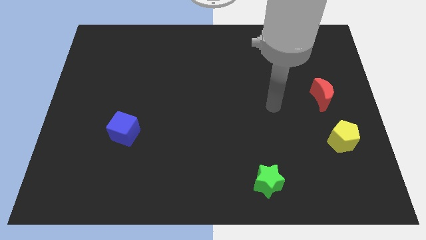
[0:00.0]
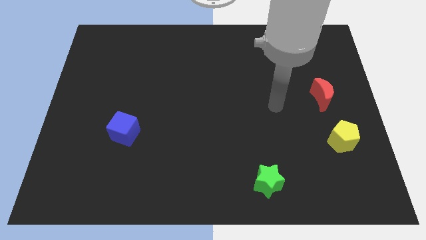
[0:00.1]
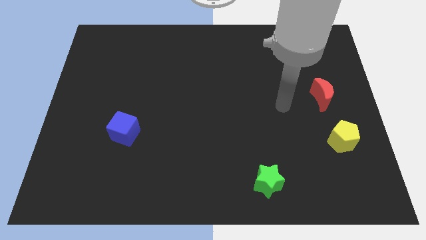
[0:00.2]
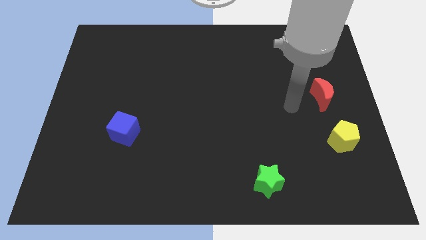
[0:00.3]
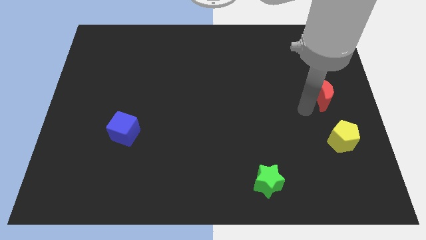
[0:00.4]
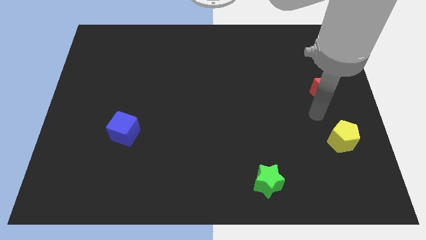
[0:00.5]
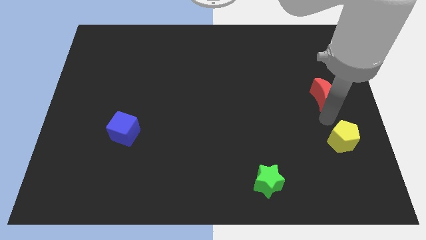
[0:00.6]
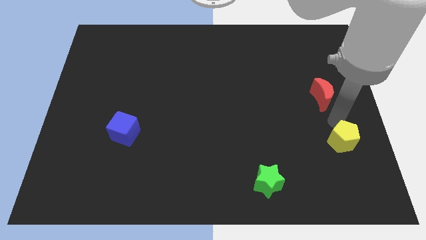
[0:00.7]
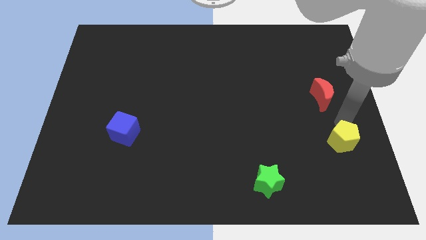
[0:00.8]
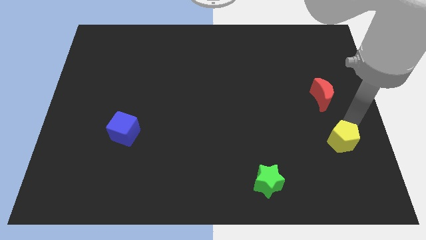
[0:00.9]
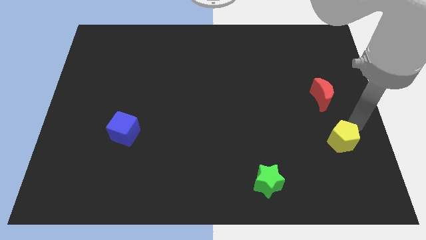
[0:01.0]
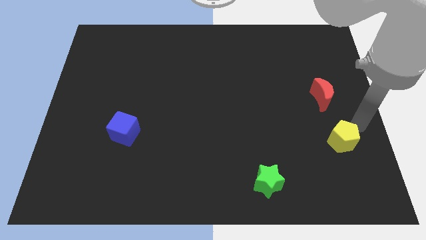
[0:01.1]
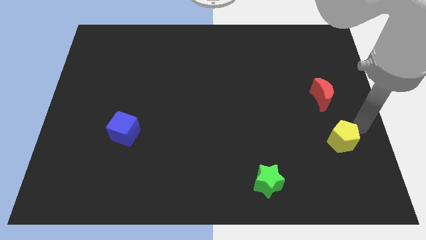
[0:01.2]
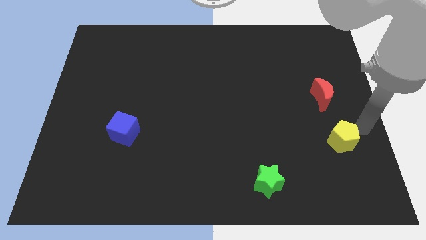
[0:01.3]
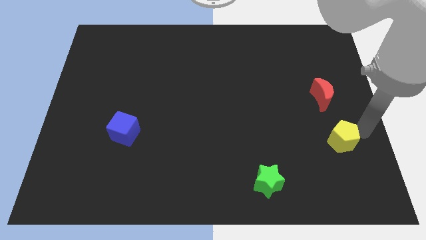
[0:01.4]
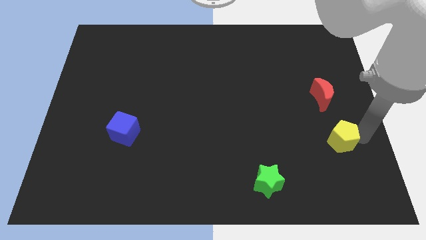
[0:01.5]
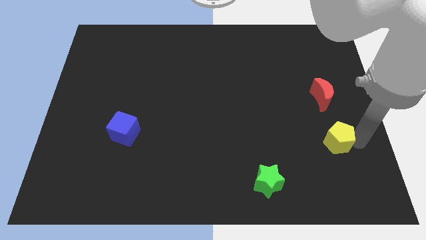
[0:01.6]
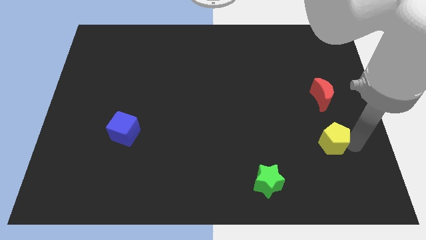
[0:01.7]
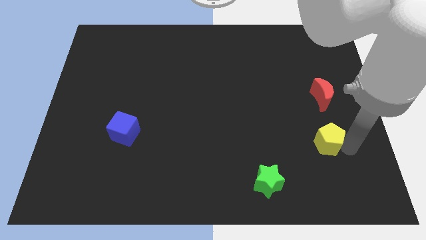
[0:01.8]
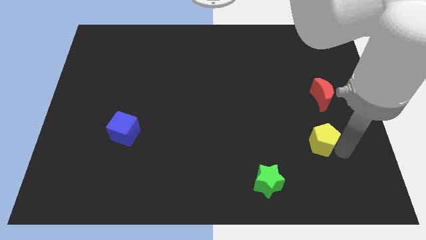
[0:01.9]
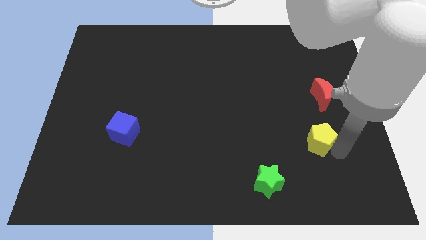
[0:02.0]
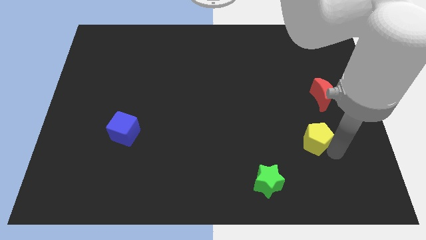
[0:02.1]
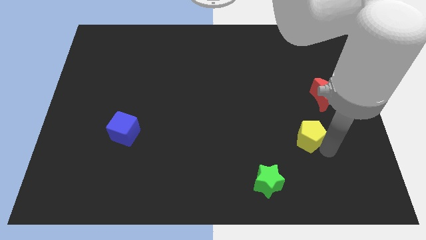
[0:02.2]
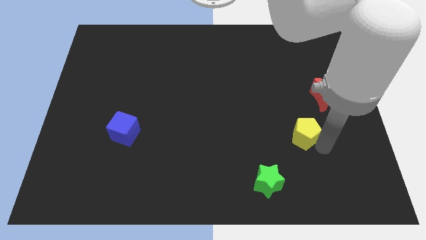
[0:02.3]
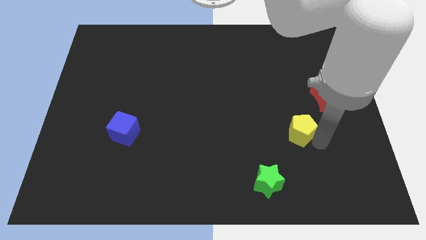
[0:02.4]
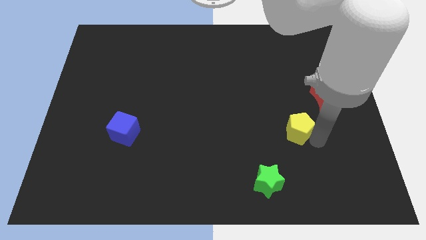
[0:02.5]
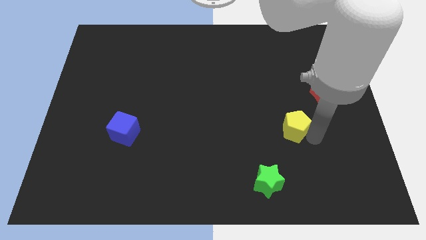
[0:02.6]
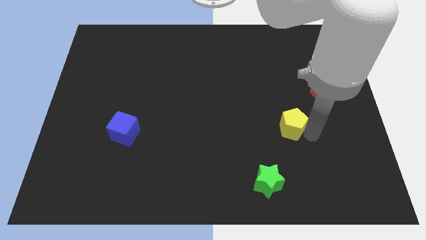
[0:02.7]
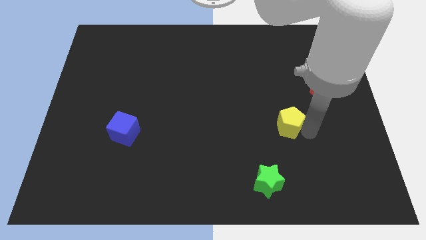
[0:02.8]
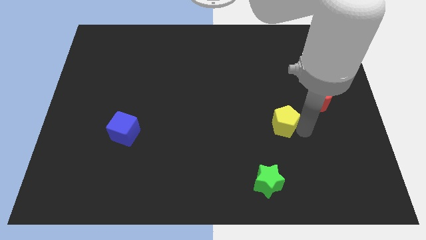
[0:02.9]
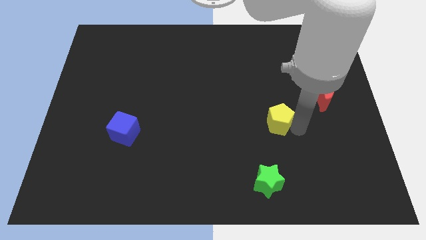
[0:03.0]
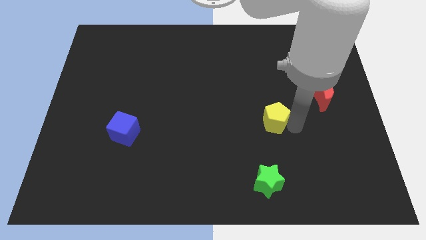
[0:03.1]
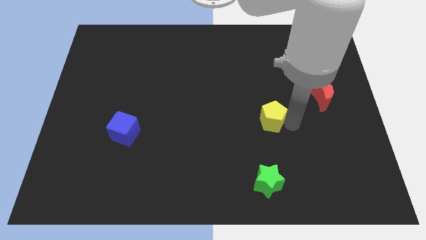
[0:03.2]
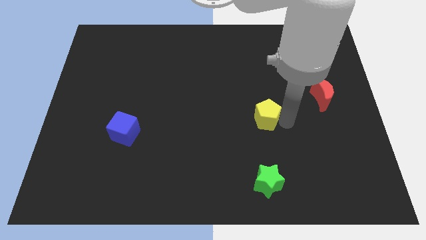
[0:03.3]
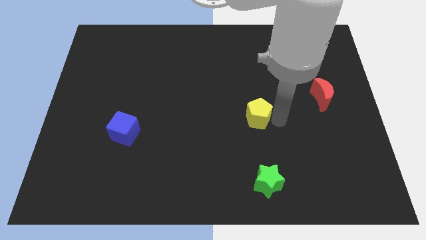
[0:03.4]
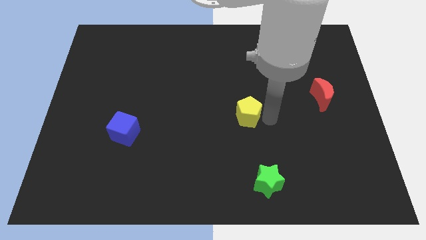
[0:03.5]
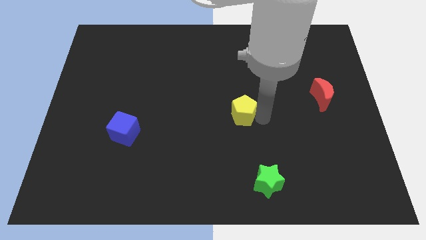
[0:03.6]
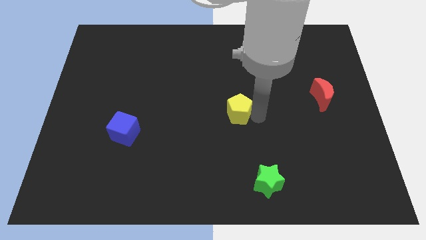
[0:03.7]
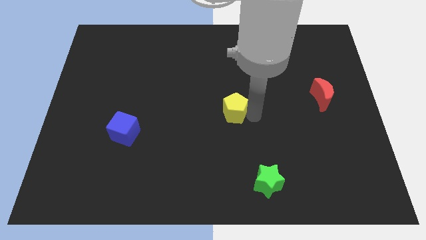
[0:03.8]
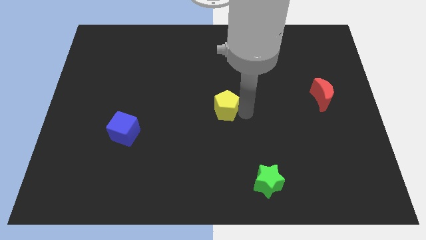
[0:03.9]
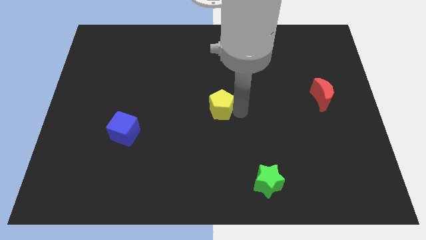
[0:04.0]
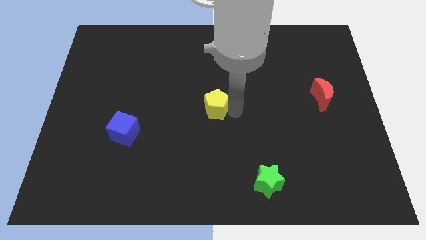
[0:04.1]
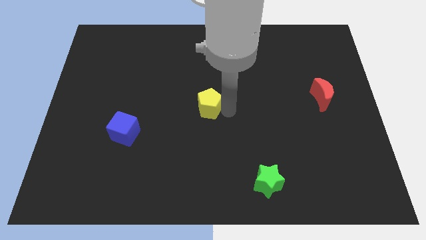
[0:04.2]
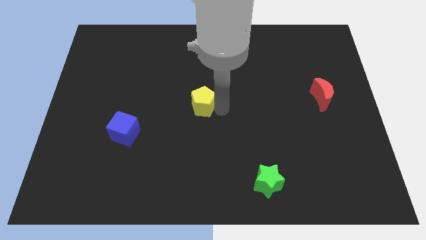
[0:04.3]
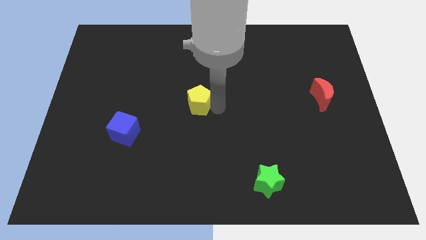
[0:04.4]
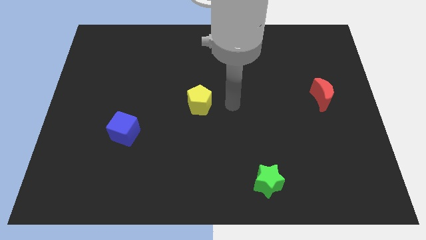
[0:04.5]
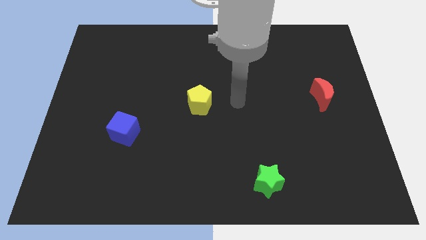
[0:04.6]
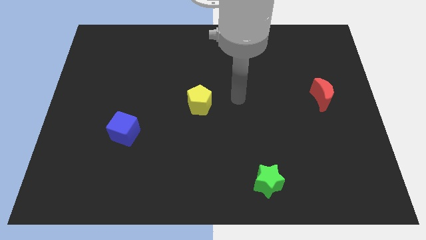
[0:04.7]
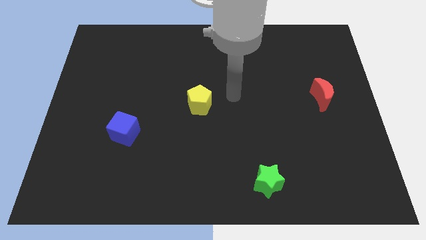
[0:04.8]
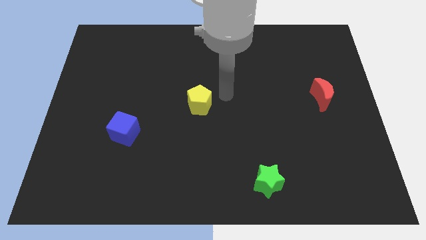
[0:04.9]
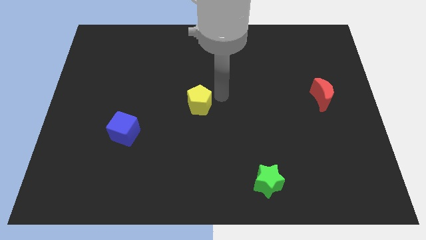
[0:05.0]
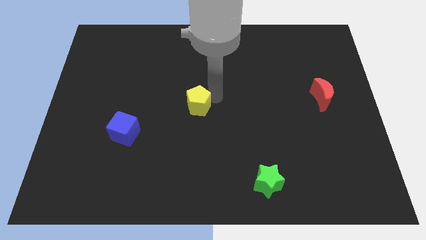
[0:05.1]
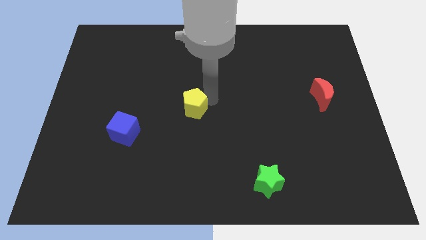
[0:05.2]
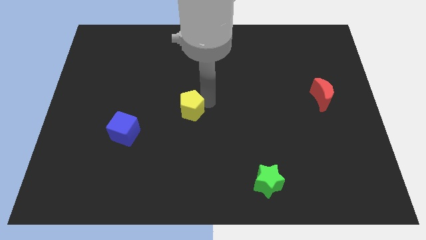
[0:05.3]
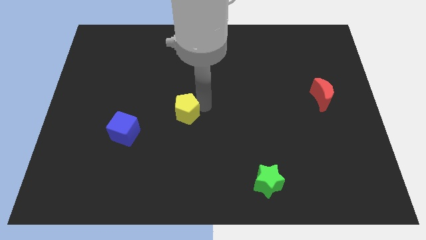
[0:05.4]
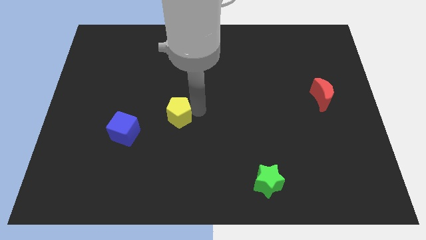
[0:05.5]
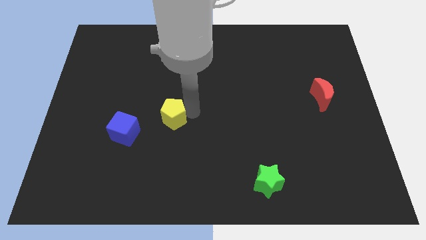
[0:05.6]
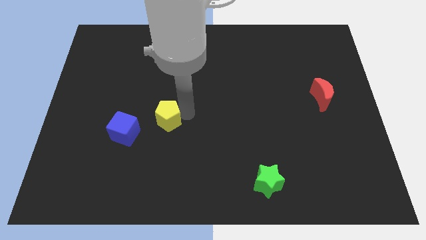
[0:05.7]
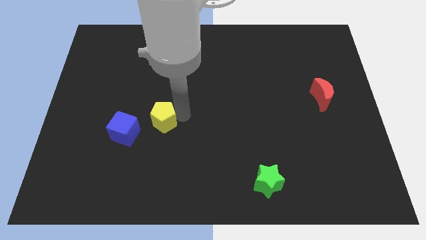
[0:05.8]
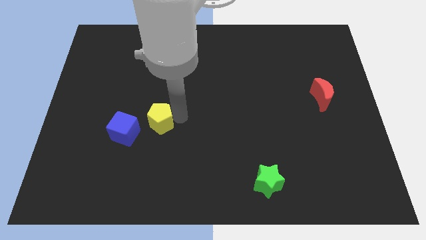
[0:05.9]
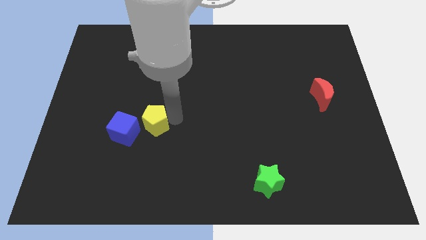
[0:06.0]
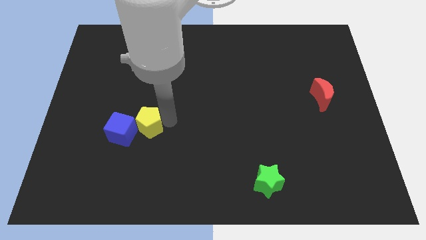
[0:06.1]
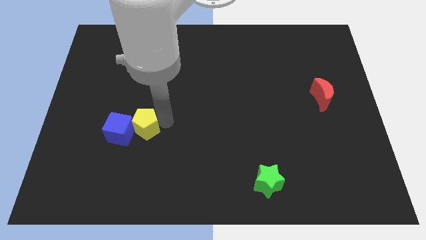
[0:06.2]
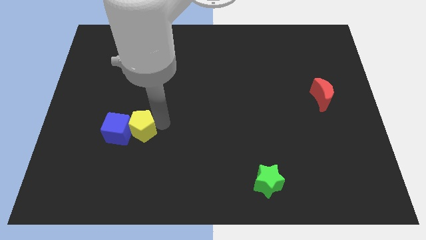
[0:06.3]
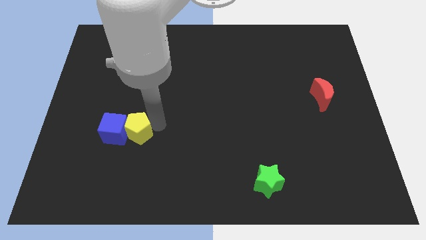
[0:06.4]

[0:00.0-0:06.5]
push the pentagon towards the blue block

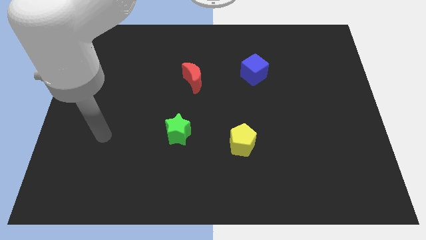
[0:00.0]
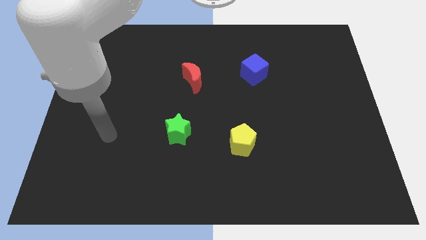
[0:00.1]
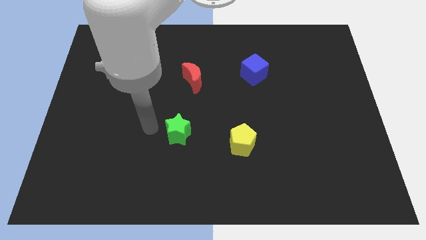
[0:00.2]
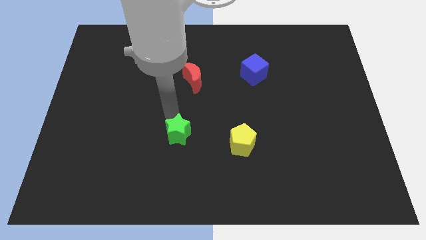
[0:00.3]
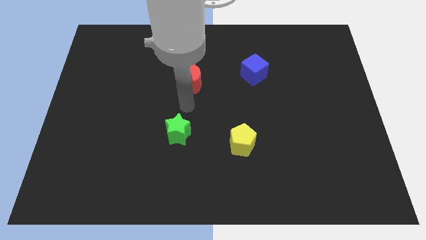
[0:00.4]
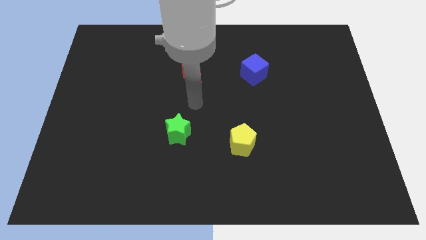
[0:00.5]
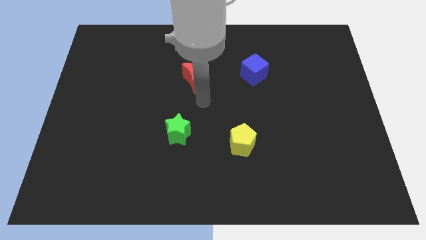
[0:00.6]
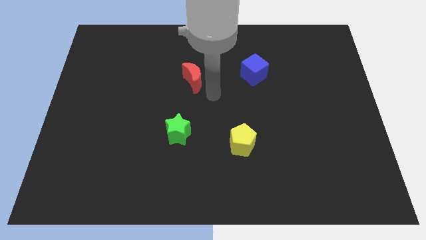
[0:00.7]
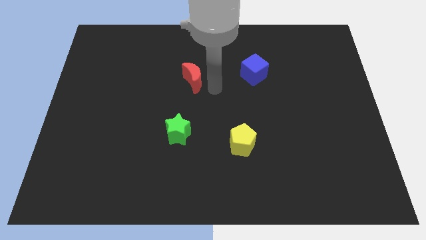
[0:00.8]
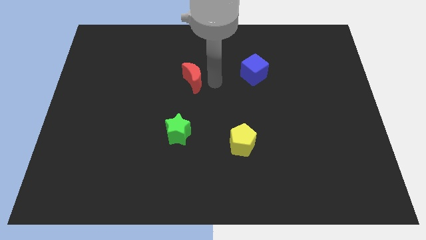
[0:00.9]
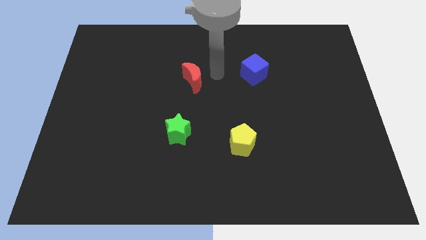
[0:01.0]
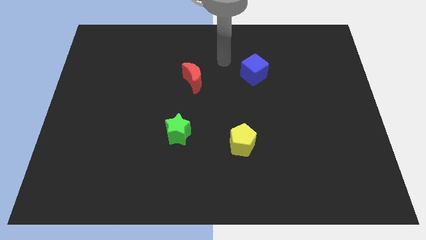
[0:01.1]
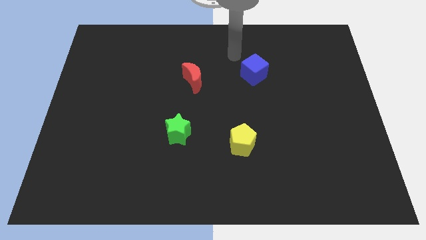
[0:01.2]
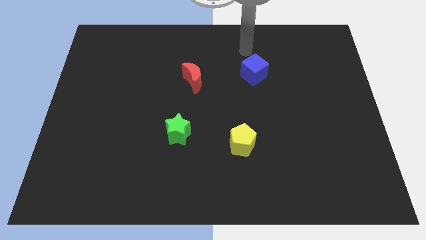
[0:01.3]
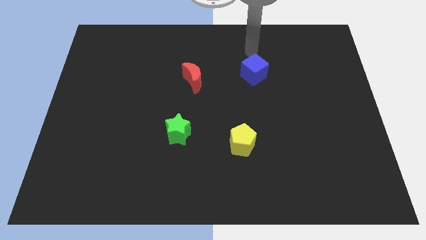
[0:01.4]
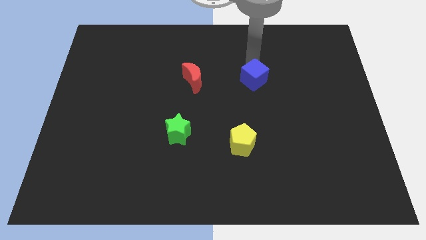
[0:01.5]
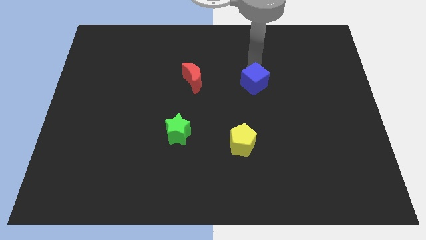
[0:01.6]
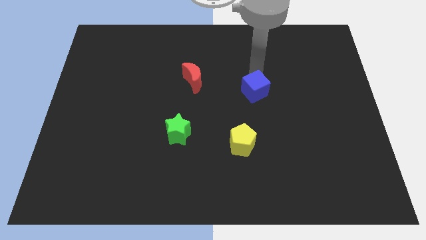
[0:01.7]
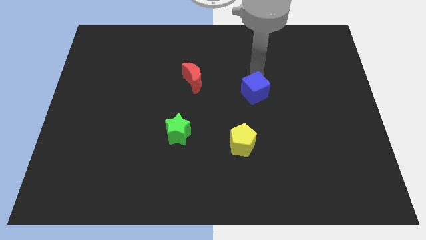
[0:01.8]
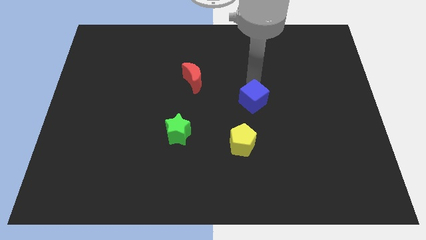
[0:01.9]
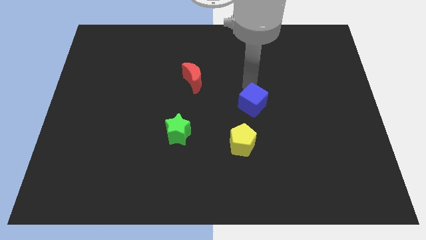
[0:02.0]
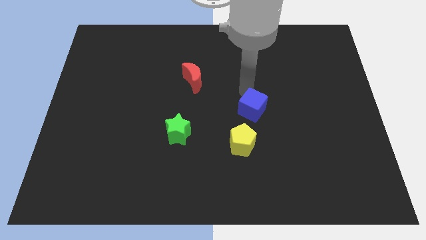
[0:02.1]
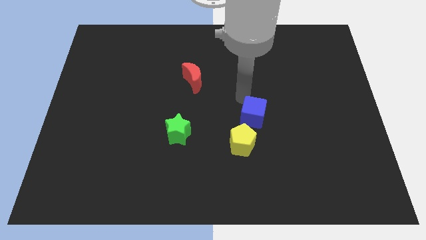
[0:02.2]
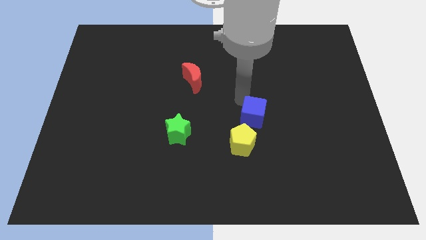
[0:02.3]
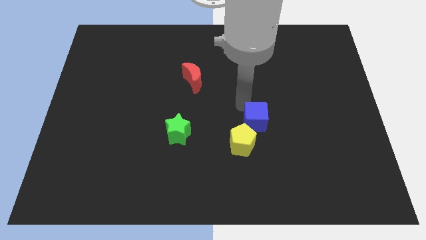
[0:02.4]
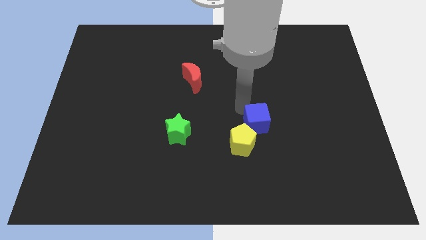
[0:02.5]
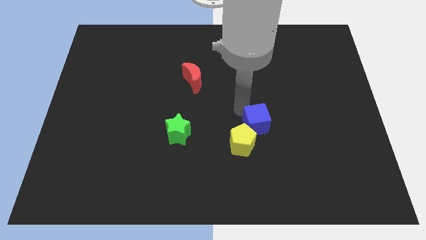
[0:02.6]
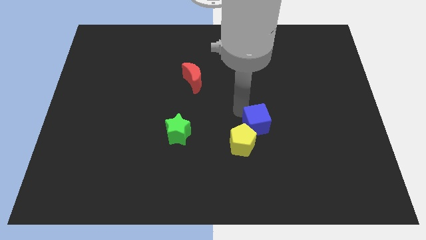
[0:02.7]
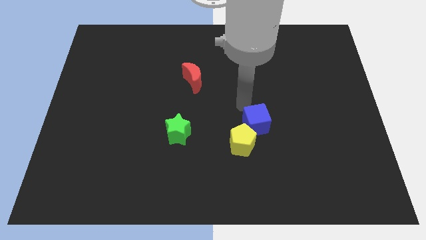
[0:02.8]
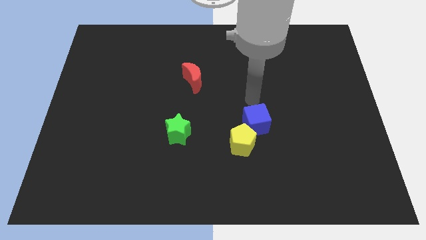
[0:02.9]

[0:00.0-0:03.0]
slide the blue block close to the yellow pentagon
